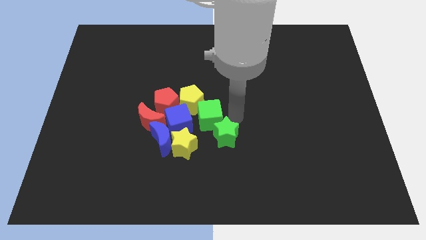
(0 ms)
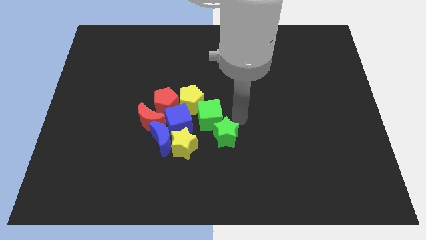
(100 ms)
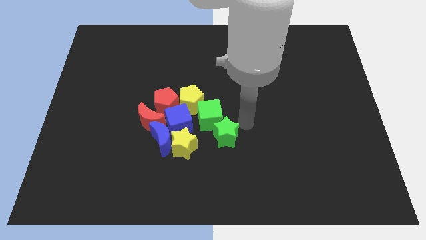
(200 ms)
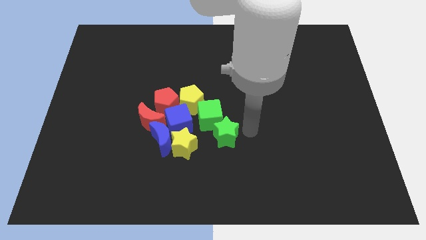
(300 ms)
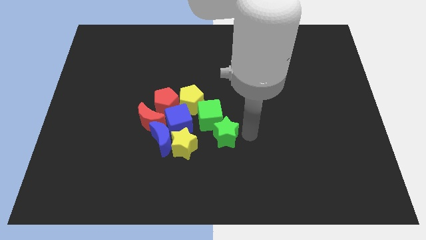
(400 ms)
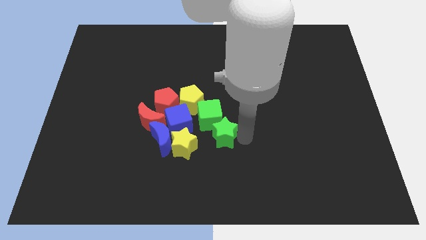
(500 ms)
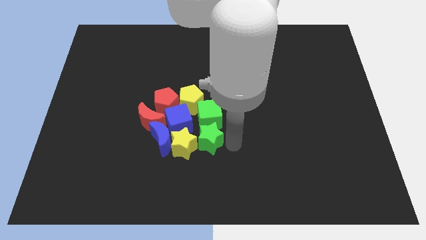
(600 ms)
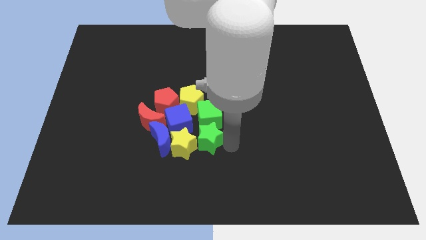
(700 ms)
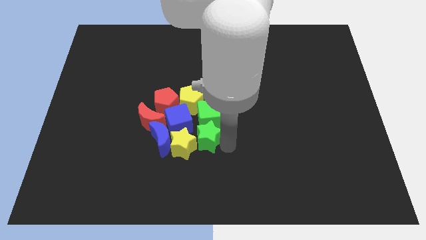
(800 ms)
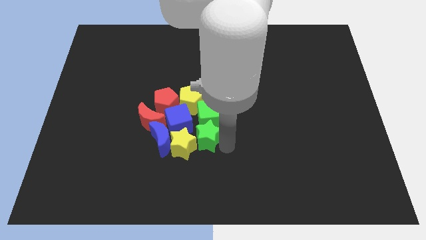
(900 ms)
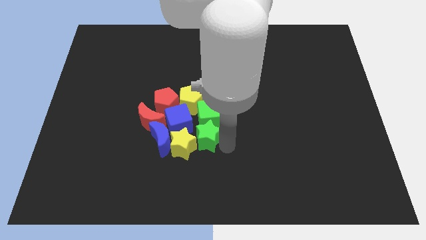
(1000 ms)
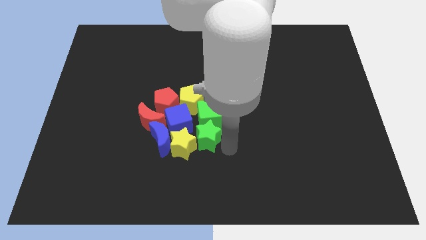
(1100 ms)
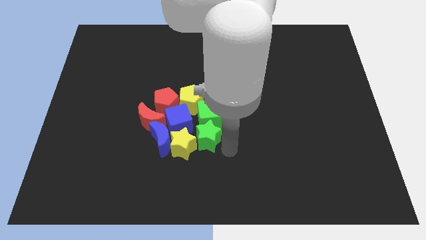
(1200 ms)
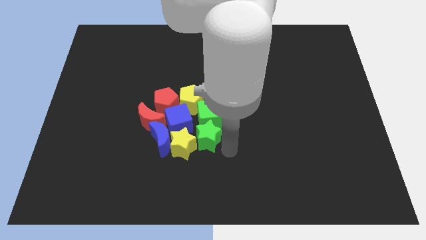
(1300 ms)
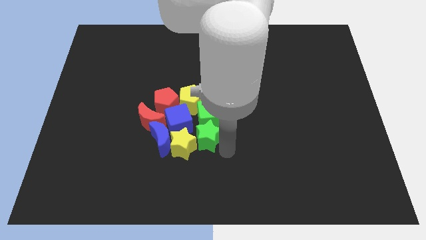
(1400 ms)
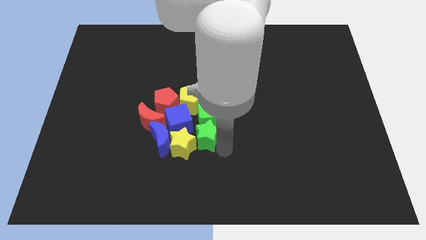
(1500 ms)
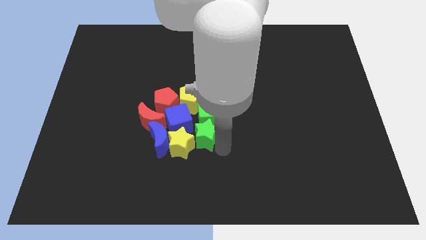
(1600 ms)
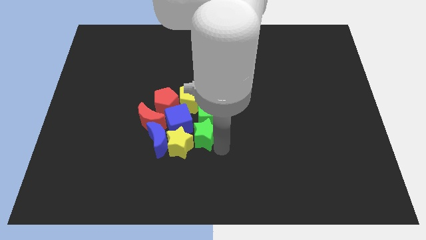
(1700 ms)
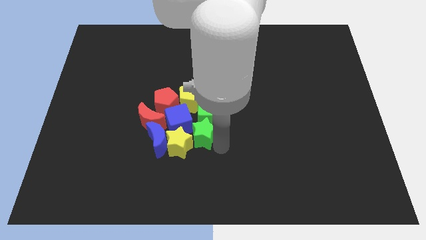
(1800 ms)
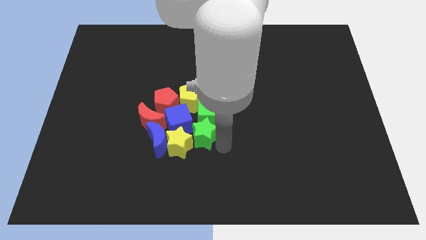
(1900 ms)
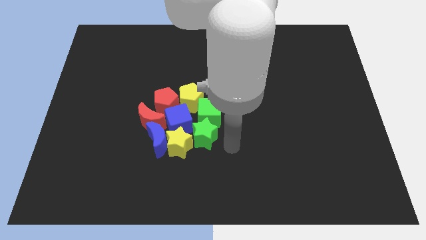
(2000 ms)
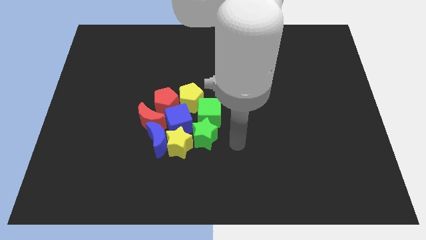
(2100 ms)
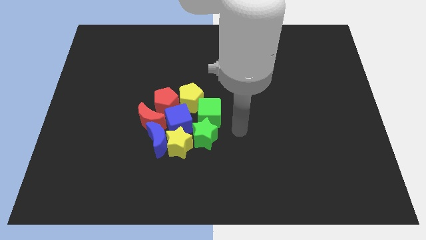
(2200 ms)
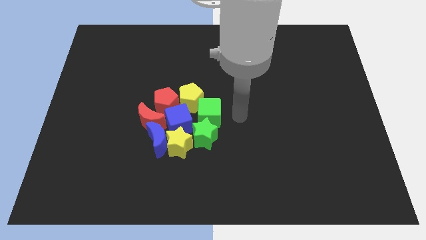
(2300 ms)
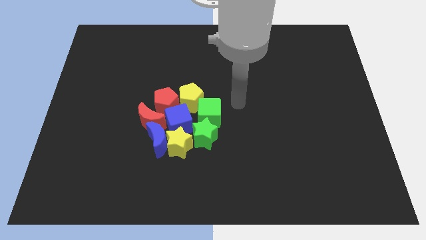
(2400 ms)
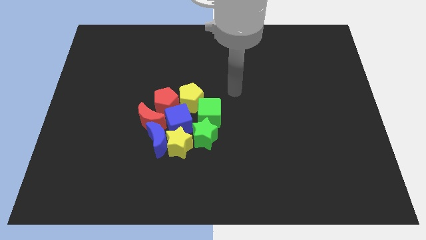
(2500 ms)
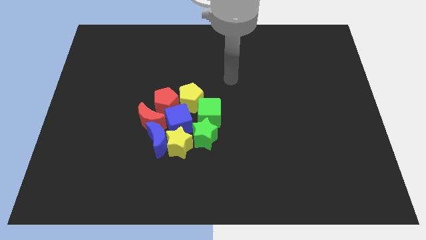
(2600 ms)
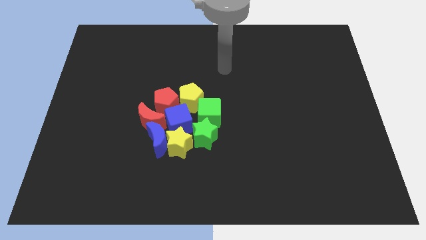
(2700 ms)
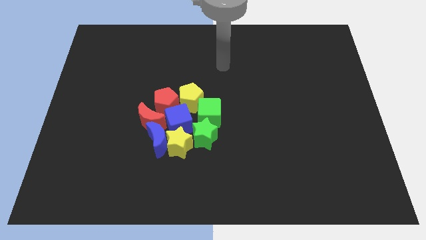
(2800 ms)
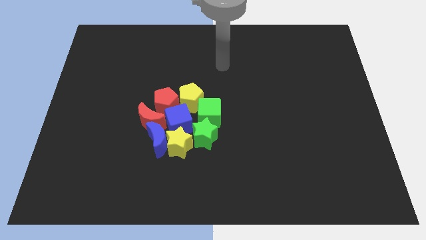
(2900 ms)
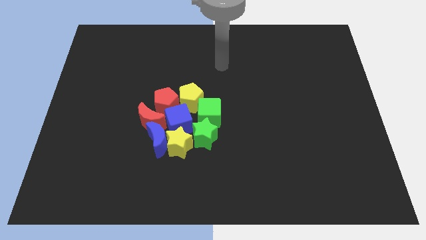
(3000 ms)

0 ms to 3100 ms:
add the green star to the group of blocks

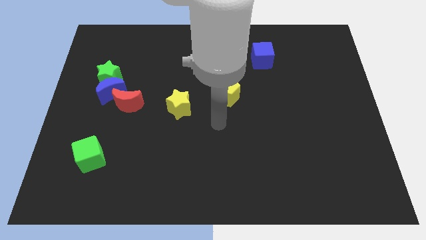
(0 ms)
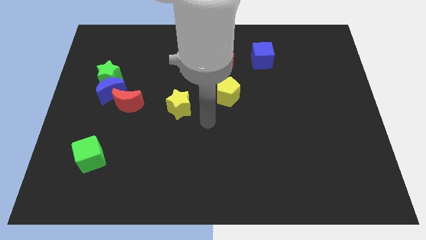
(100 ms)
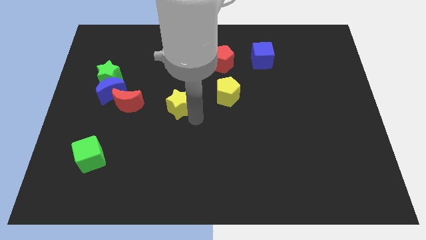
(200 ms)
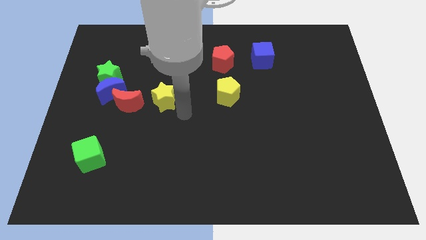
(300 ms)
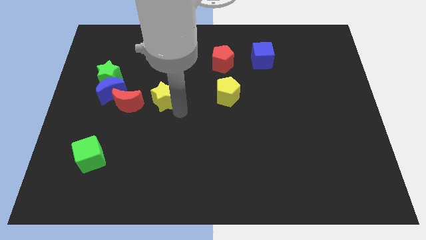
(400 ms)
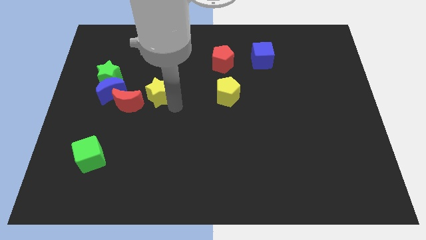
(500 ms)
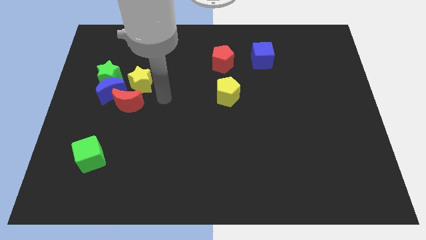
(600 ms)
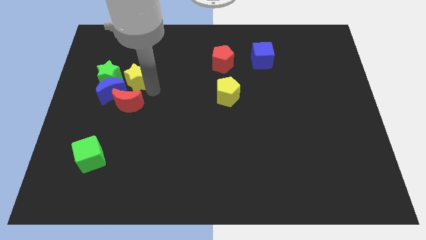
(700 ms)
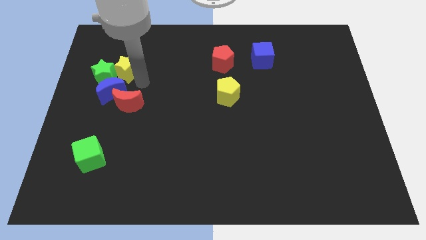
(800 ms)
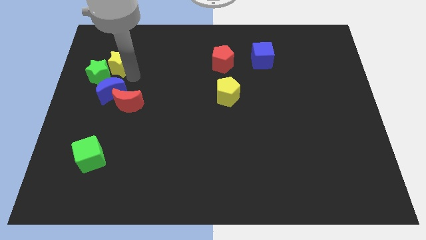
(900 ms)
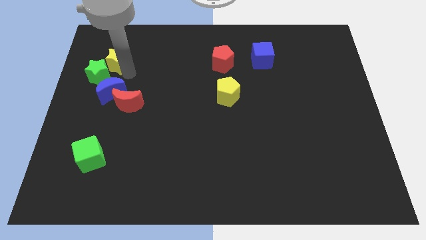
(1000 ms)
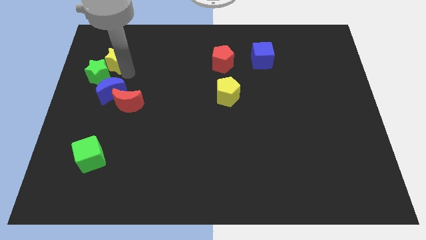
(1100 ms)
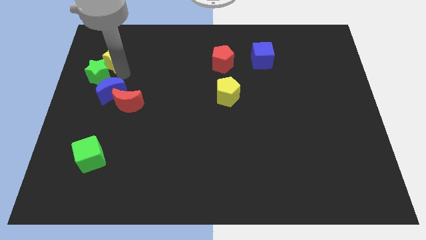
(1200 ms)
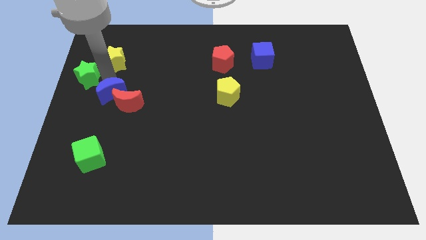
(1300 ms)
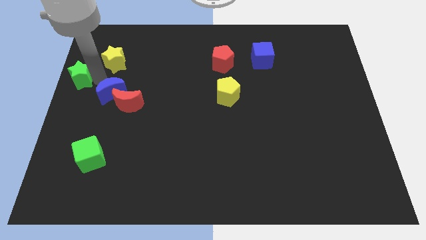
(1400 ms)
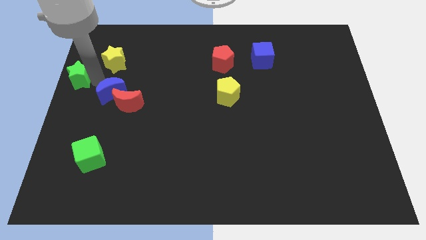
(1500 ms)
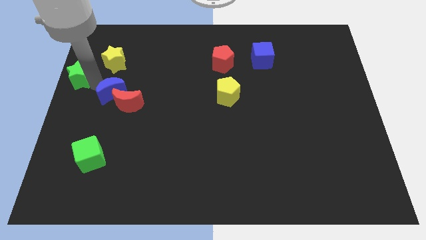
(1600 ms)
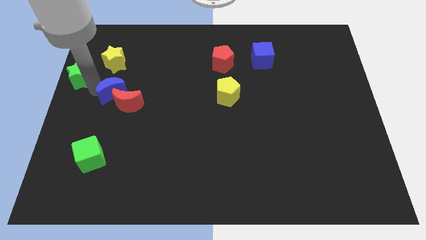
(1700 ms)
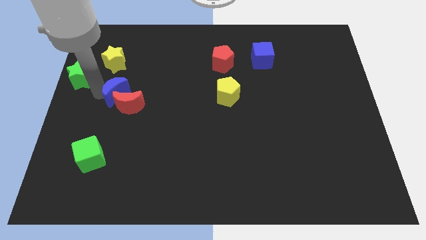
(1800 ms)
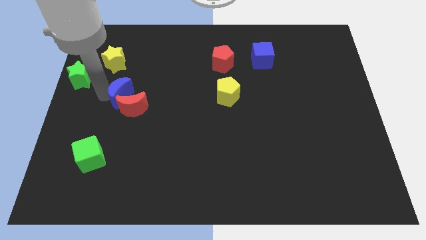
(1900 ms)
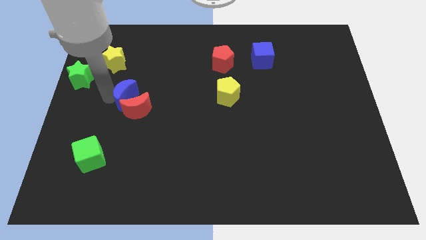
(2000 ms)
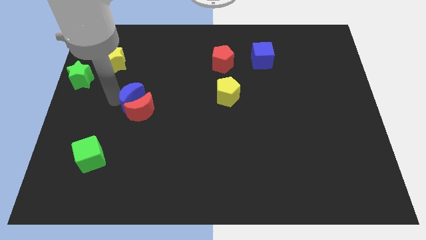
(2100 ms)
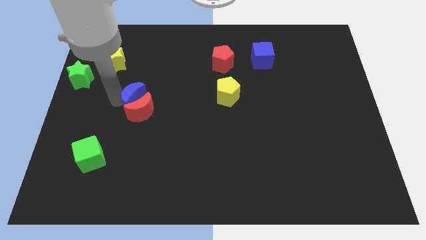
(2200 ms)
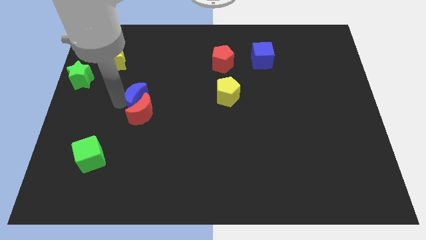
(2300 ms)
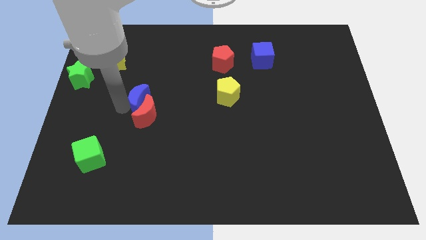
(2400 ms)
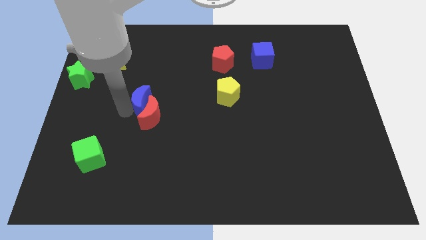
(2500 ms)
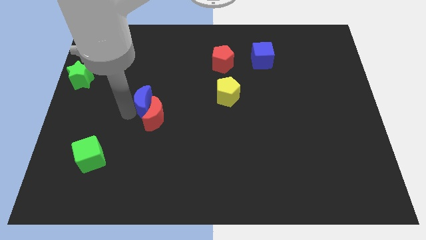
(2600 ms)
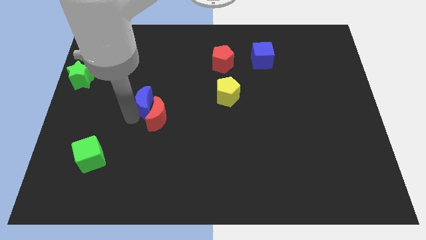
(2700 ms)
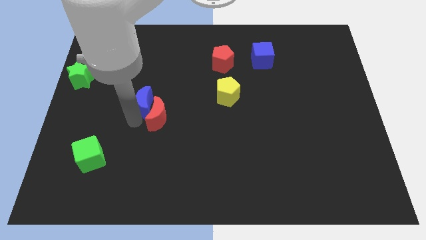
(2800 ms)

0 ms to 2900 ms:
push the yellow star to the top left separating the blue and red crescents

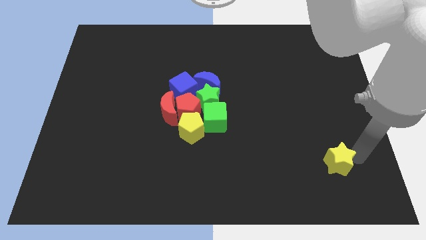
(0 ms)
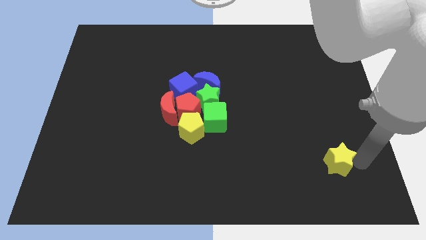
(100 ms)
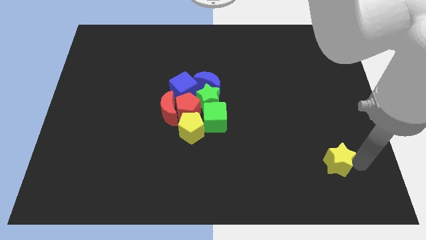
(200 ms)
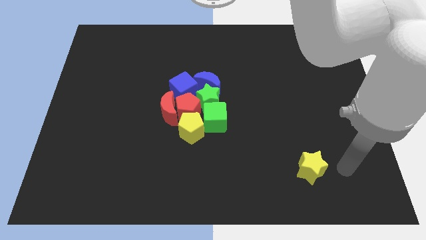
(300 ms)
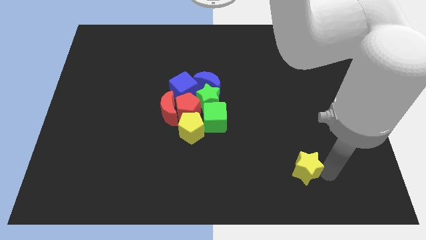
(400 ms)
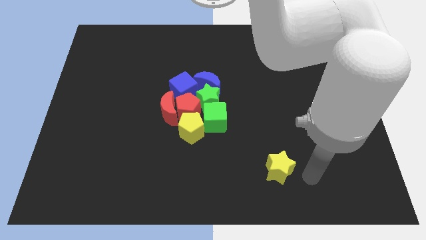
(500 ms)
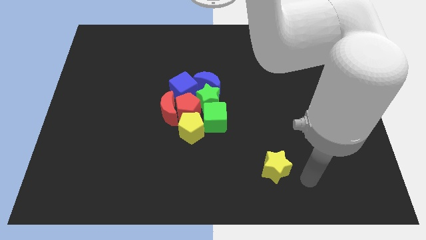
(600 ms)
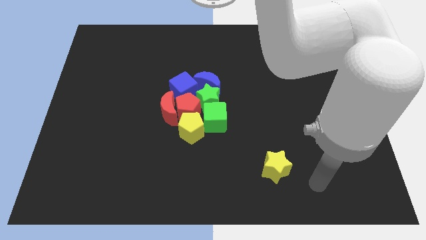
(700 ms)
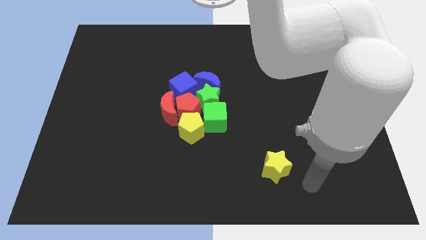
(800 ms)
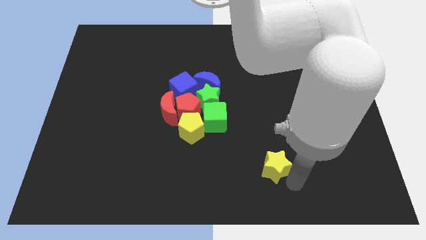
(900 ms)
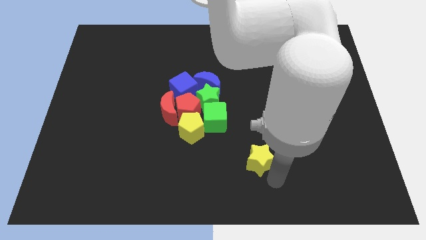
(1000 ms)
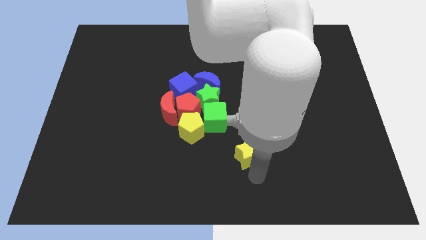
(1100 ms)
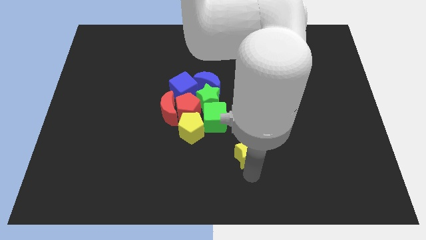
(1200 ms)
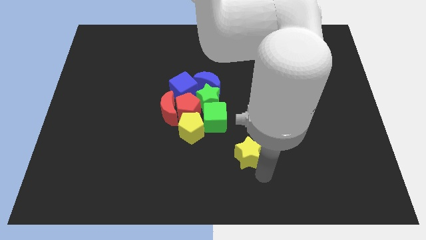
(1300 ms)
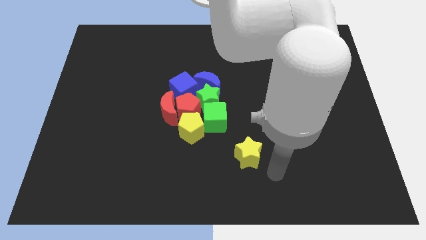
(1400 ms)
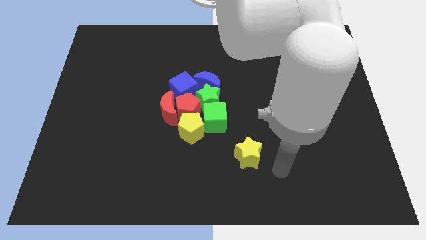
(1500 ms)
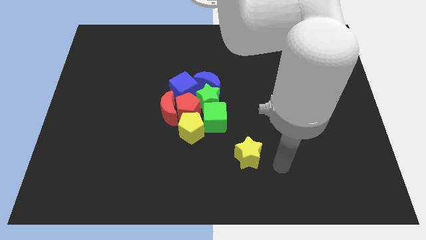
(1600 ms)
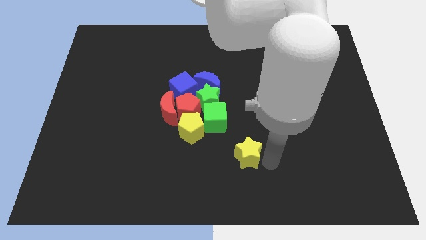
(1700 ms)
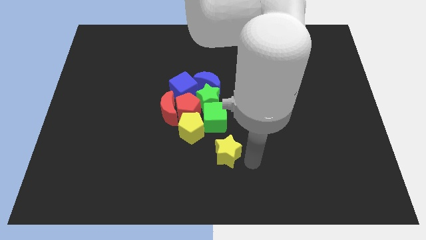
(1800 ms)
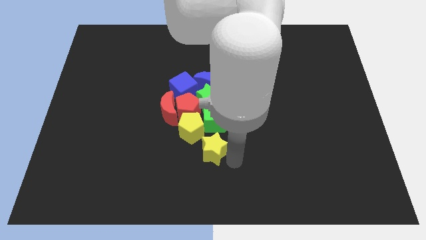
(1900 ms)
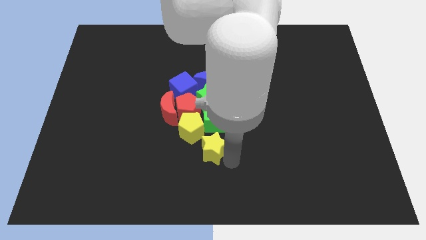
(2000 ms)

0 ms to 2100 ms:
push the yellow star towards the yellow pentagon

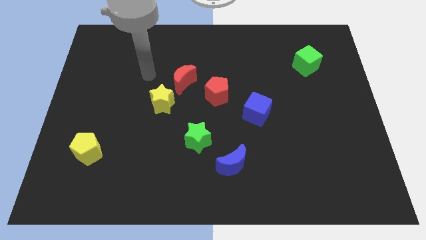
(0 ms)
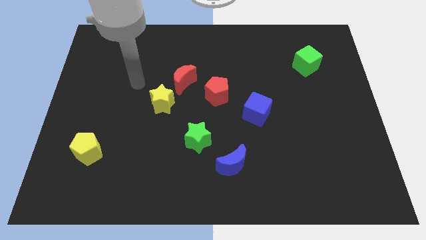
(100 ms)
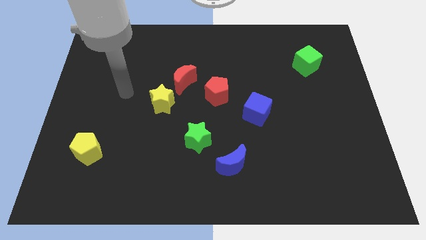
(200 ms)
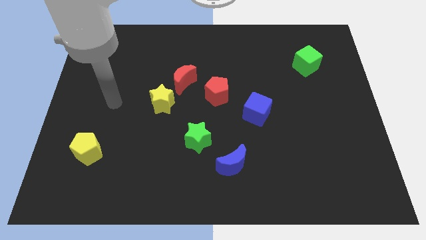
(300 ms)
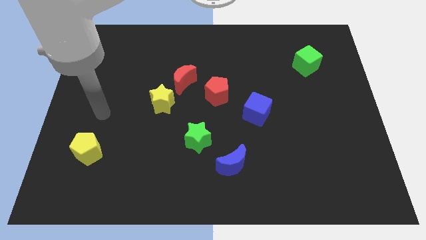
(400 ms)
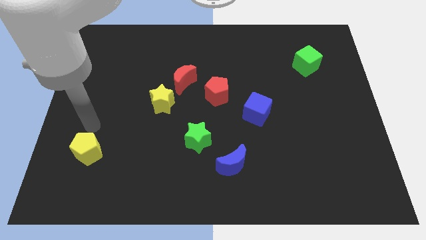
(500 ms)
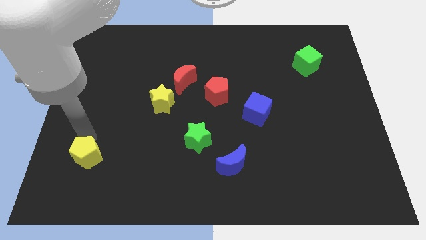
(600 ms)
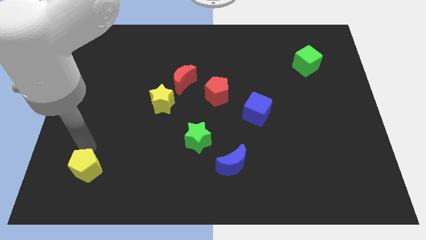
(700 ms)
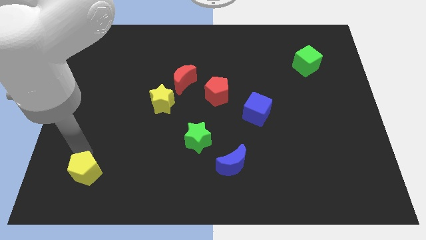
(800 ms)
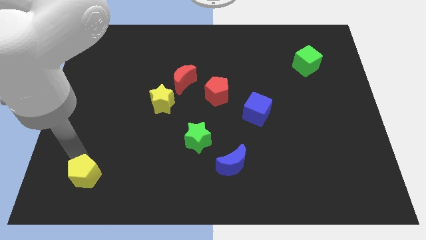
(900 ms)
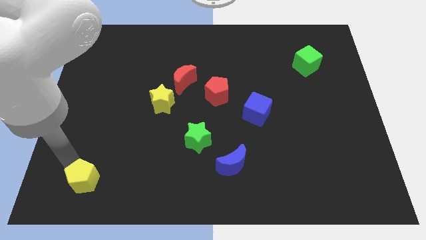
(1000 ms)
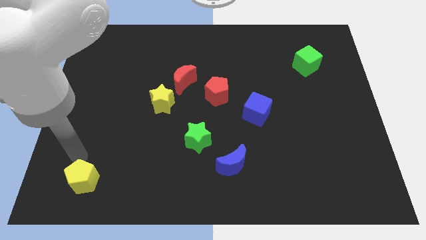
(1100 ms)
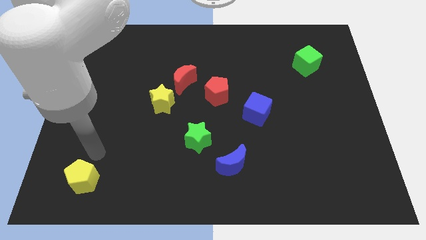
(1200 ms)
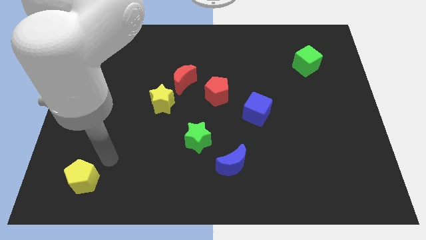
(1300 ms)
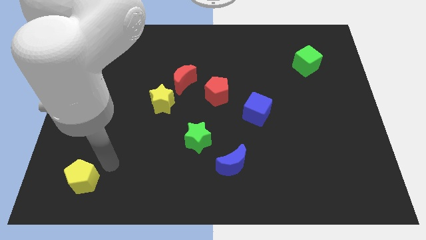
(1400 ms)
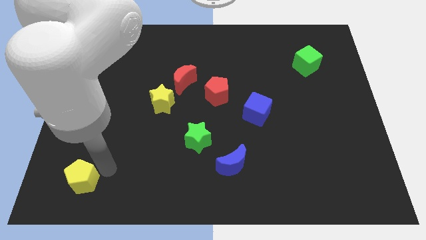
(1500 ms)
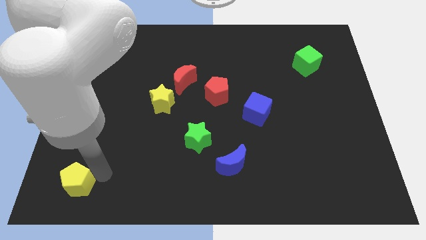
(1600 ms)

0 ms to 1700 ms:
push the yellow pentagon towards the bottom
